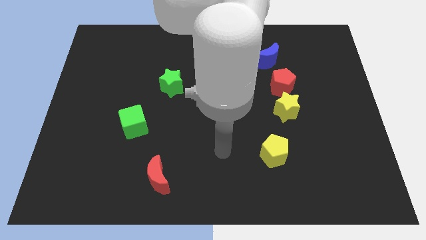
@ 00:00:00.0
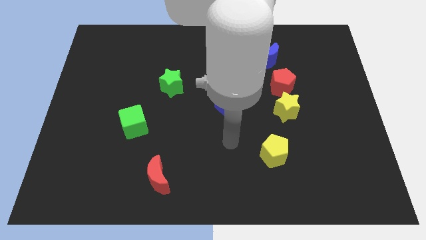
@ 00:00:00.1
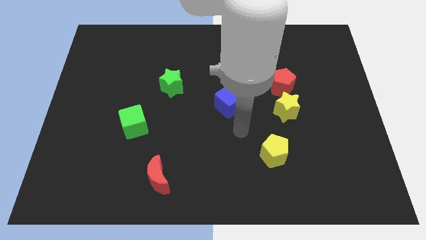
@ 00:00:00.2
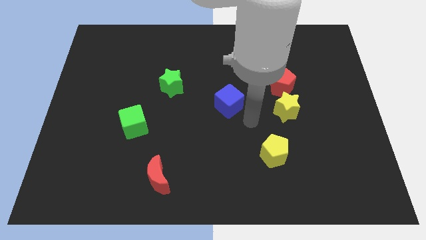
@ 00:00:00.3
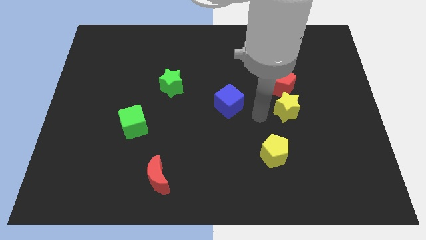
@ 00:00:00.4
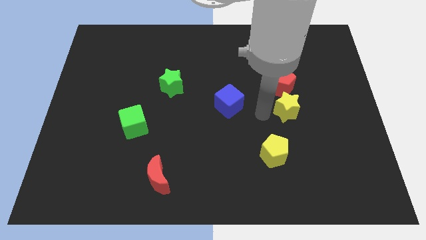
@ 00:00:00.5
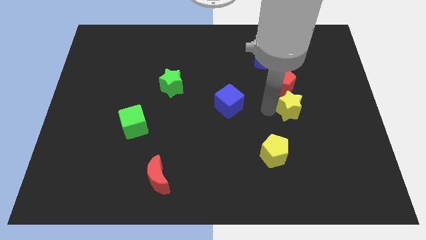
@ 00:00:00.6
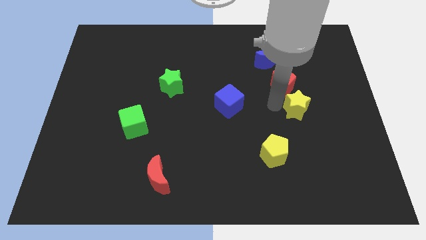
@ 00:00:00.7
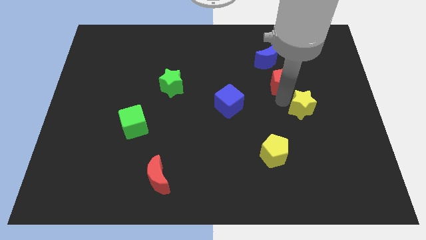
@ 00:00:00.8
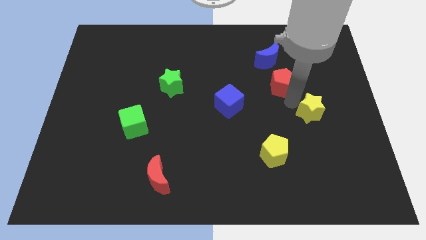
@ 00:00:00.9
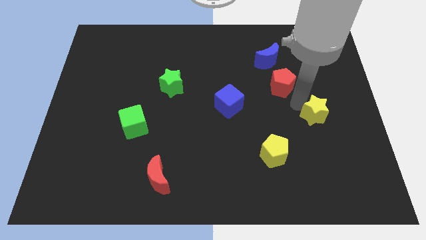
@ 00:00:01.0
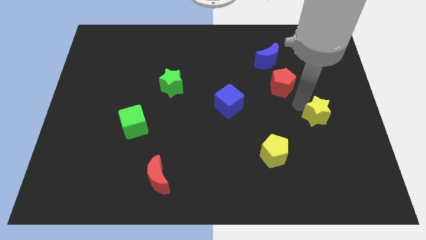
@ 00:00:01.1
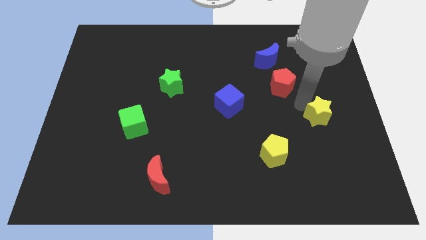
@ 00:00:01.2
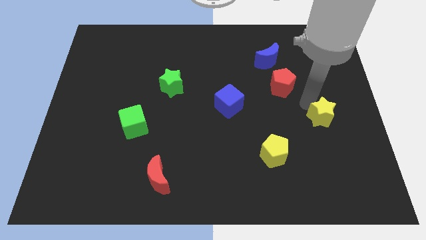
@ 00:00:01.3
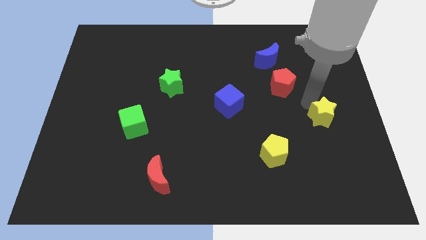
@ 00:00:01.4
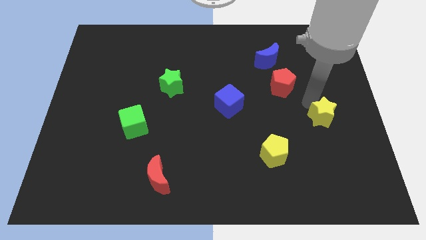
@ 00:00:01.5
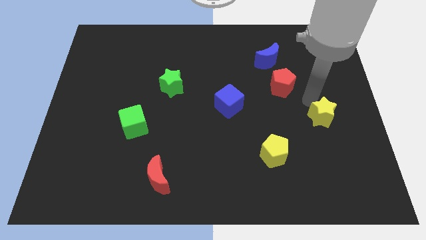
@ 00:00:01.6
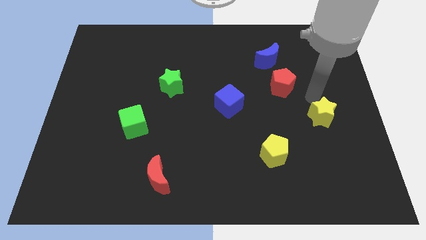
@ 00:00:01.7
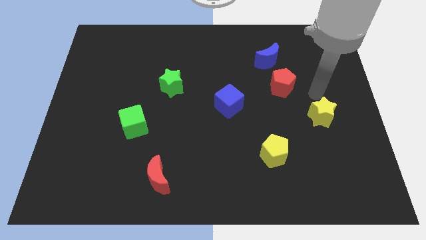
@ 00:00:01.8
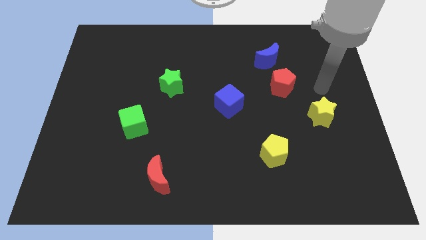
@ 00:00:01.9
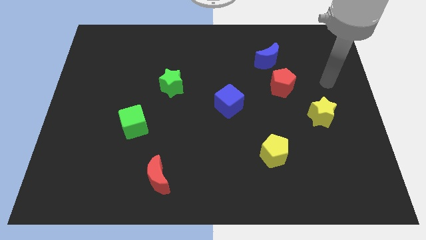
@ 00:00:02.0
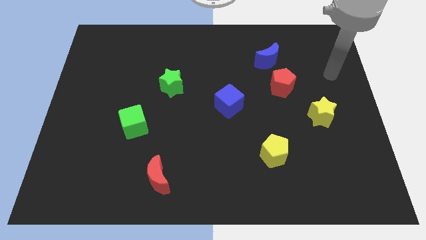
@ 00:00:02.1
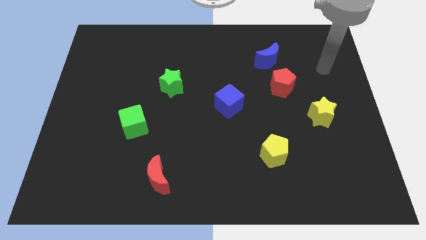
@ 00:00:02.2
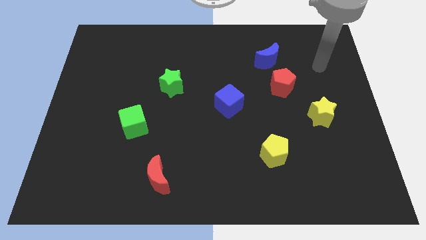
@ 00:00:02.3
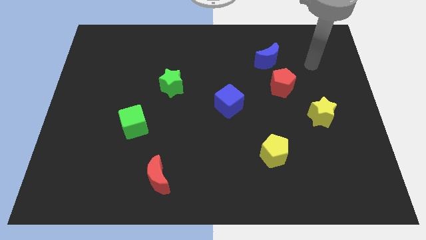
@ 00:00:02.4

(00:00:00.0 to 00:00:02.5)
move the yellow star towards the right side of the board

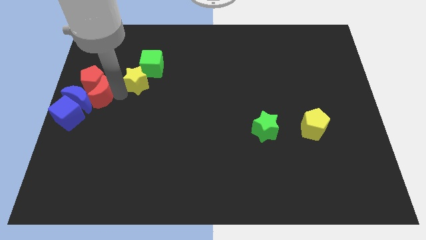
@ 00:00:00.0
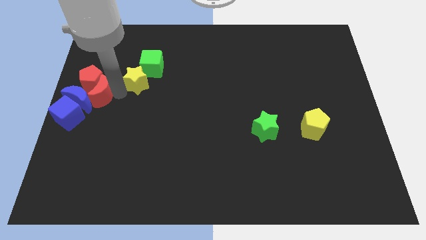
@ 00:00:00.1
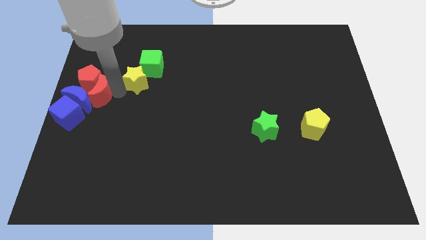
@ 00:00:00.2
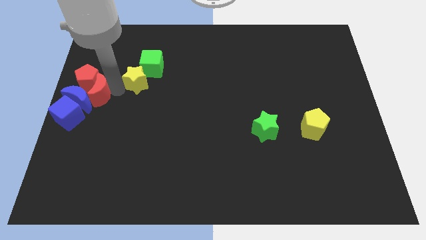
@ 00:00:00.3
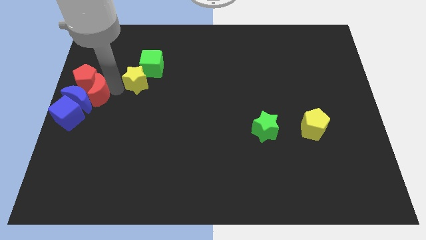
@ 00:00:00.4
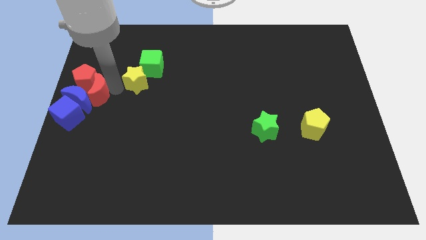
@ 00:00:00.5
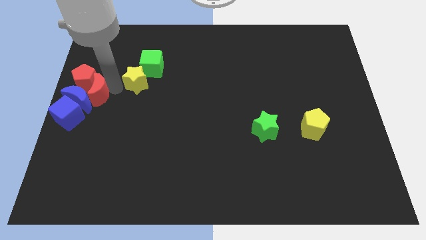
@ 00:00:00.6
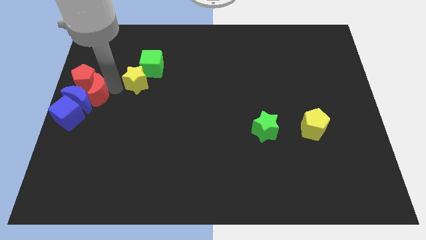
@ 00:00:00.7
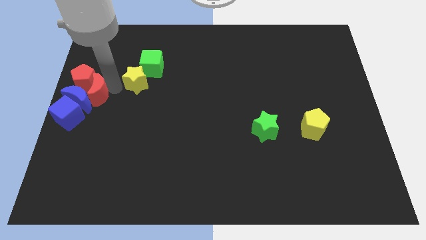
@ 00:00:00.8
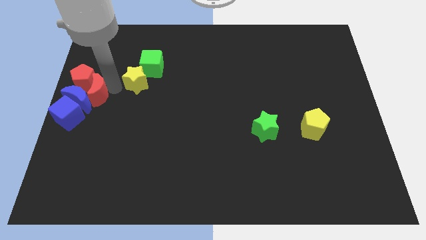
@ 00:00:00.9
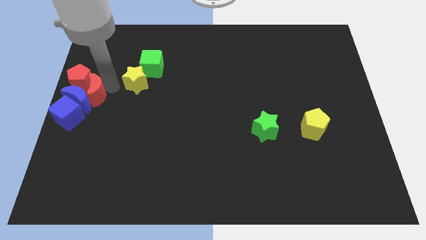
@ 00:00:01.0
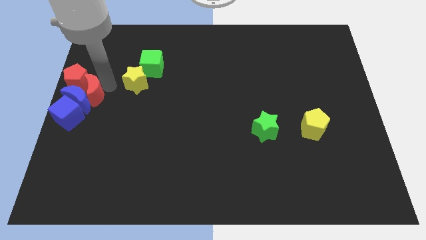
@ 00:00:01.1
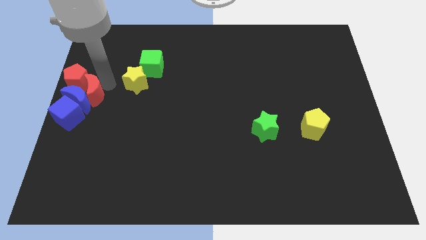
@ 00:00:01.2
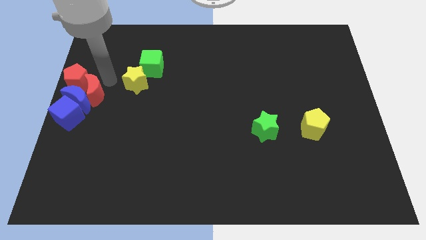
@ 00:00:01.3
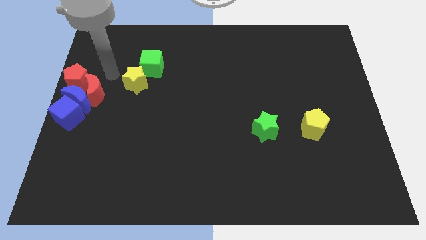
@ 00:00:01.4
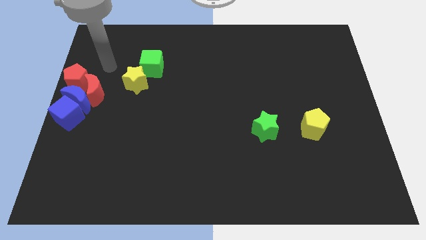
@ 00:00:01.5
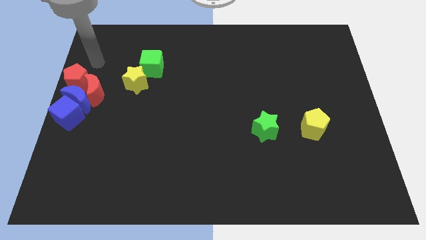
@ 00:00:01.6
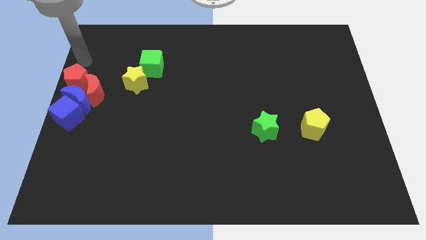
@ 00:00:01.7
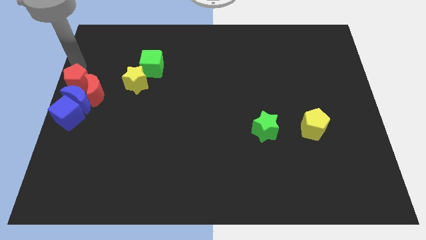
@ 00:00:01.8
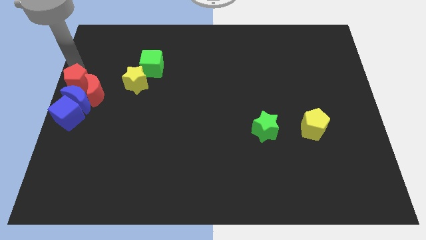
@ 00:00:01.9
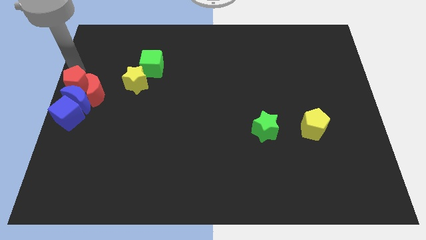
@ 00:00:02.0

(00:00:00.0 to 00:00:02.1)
place red blocks on top of blue blocks

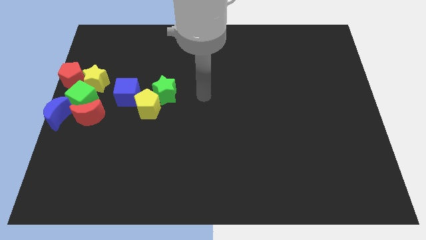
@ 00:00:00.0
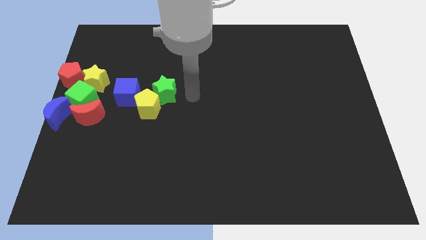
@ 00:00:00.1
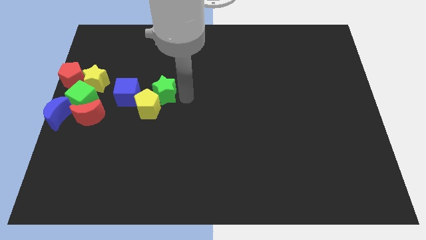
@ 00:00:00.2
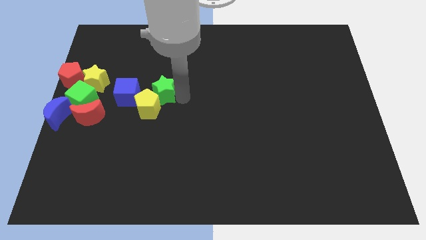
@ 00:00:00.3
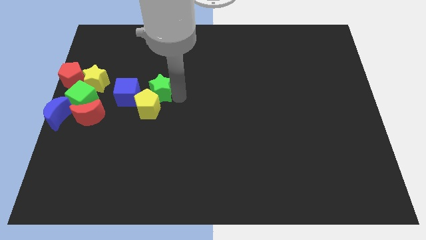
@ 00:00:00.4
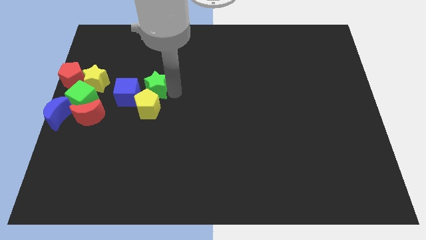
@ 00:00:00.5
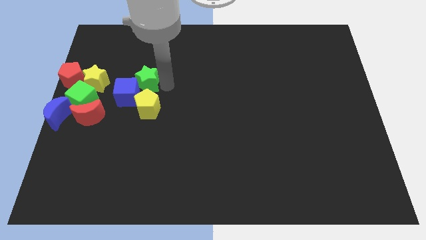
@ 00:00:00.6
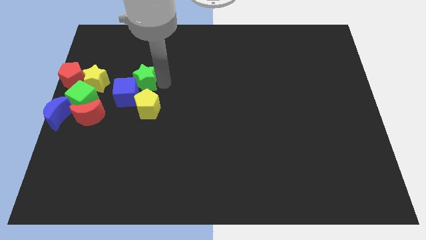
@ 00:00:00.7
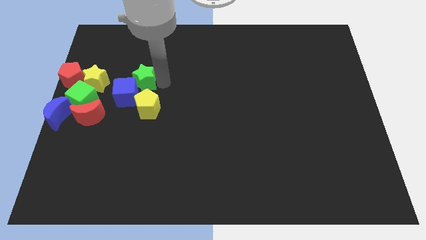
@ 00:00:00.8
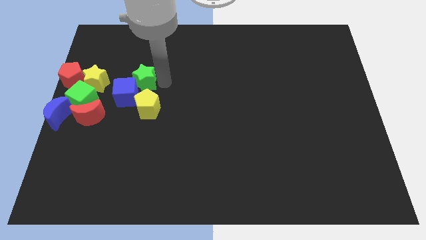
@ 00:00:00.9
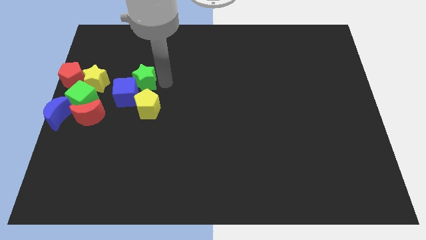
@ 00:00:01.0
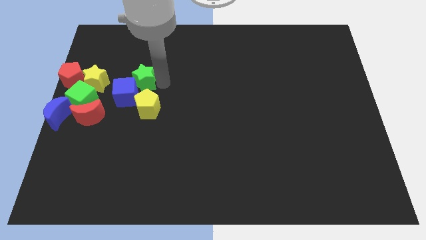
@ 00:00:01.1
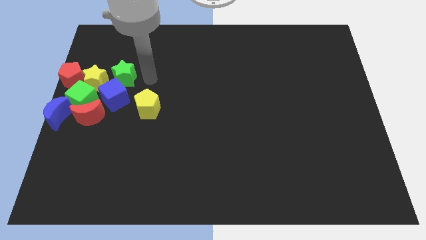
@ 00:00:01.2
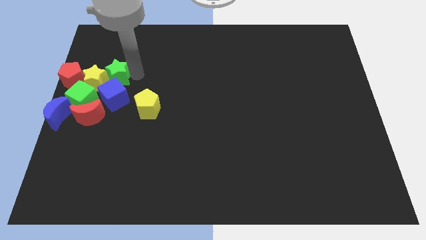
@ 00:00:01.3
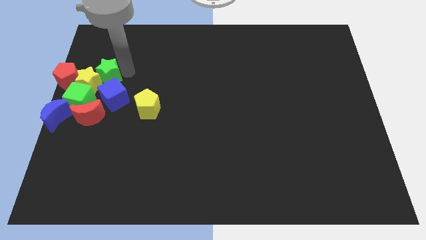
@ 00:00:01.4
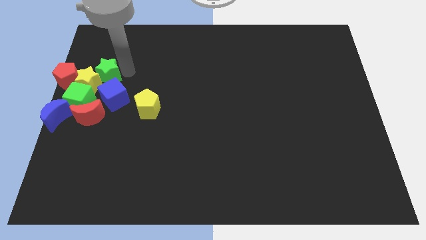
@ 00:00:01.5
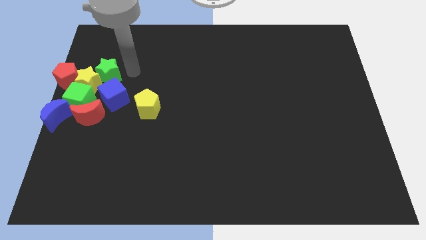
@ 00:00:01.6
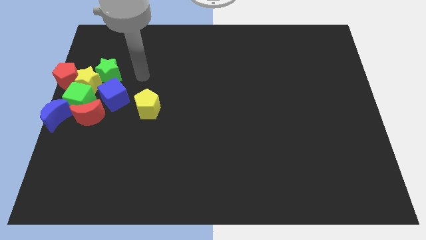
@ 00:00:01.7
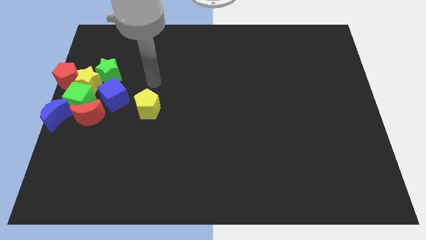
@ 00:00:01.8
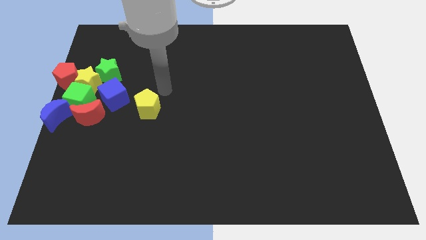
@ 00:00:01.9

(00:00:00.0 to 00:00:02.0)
push green star into the yellow star at the middle left corner

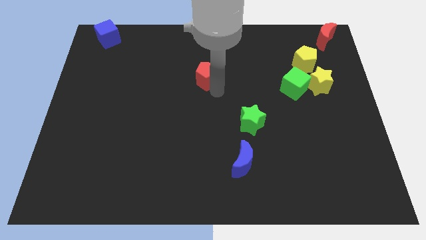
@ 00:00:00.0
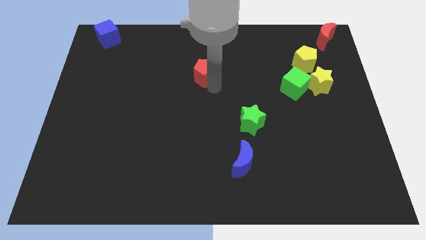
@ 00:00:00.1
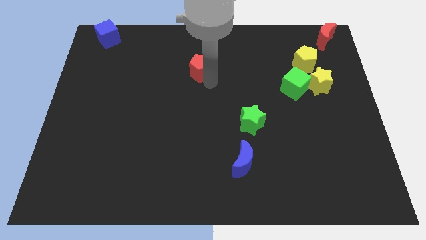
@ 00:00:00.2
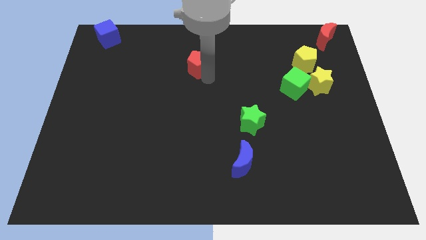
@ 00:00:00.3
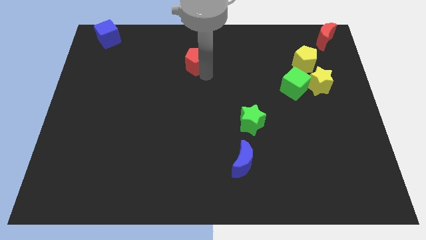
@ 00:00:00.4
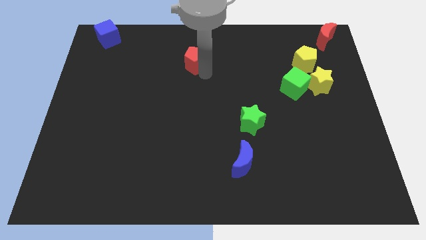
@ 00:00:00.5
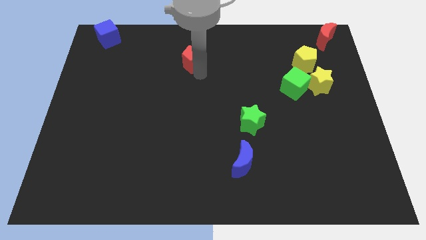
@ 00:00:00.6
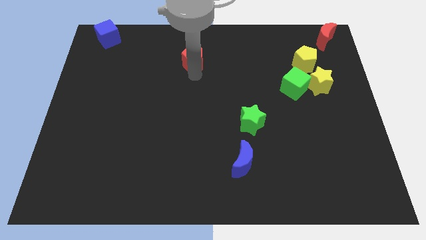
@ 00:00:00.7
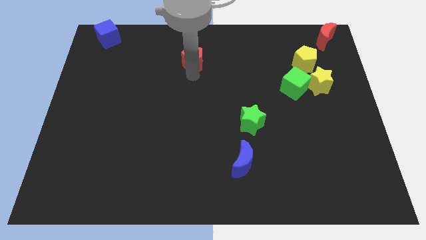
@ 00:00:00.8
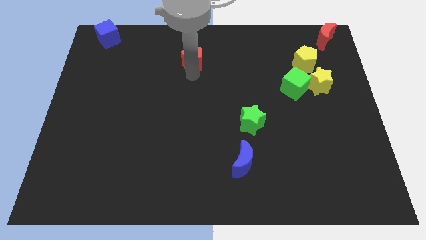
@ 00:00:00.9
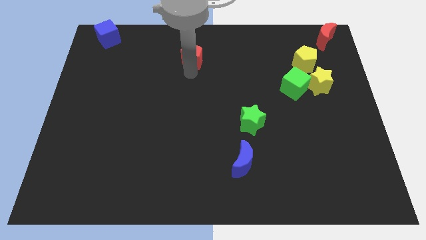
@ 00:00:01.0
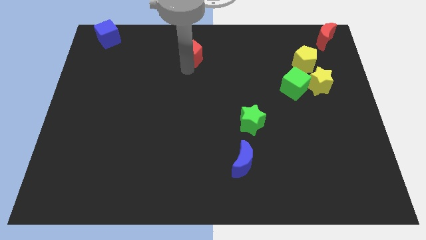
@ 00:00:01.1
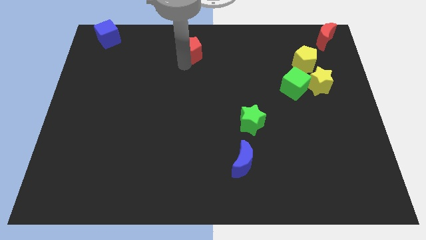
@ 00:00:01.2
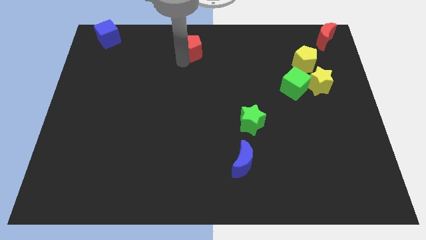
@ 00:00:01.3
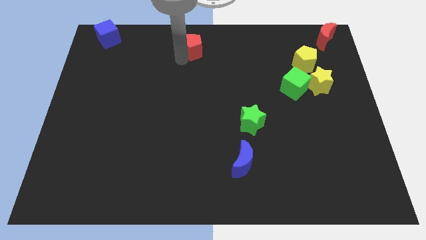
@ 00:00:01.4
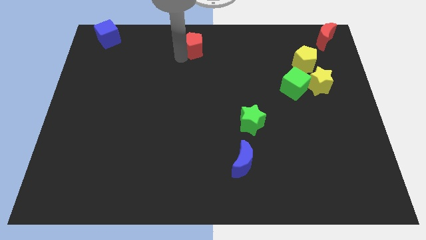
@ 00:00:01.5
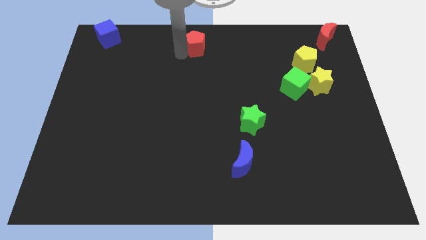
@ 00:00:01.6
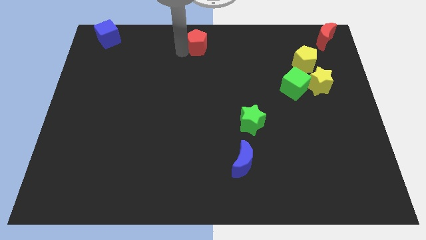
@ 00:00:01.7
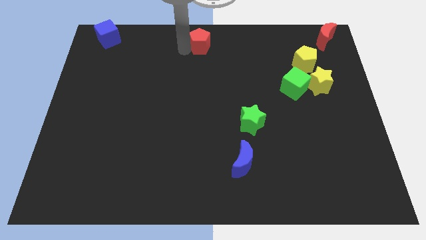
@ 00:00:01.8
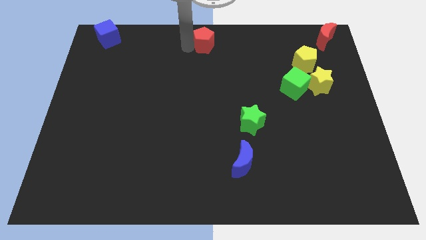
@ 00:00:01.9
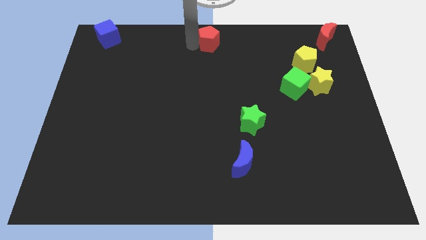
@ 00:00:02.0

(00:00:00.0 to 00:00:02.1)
push the red pentagon to the top center of the board

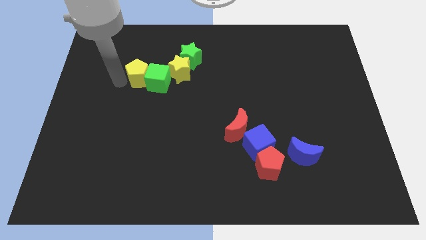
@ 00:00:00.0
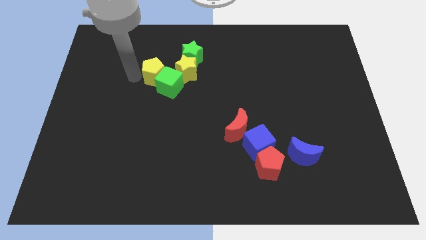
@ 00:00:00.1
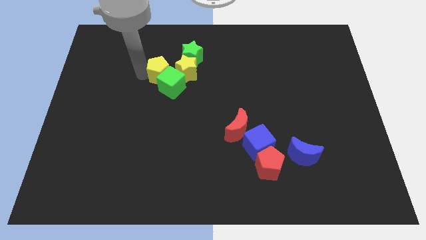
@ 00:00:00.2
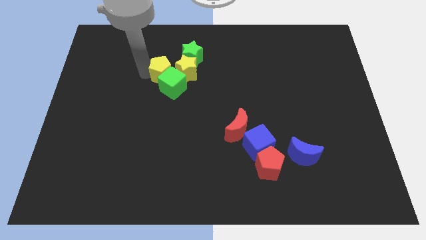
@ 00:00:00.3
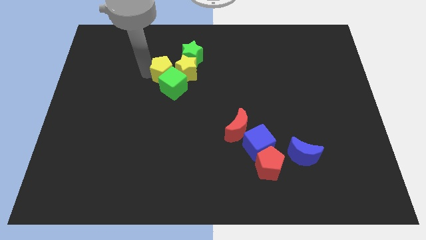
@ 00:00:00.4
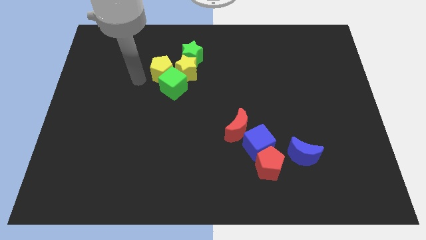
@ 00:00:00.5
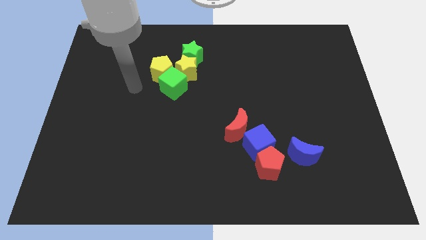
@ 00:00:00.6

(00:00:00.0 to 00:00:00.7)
push the green cube with the help of the yellow pentagon towards the bottom of the yellow star
